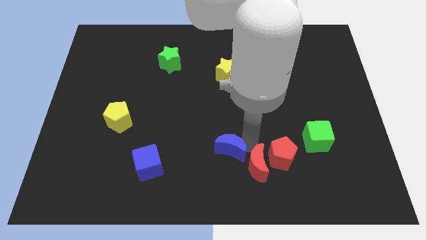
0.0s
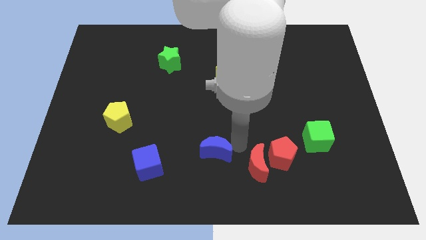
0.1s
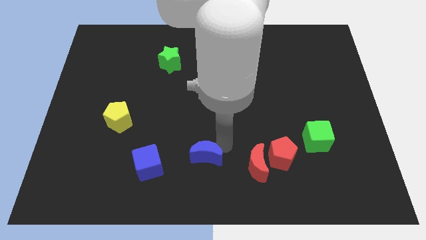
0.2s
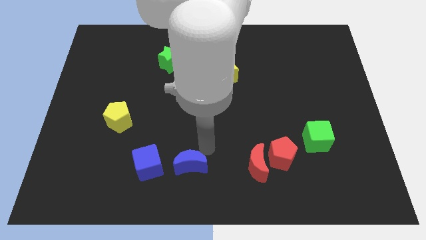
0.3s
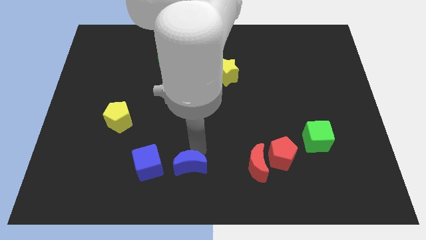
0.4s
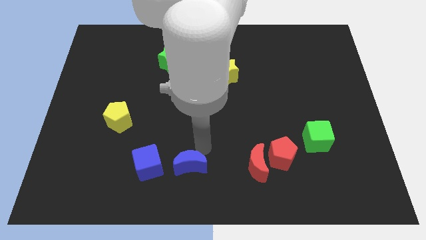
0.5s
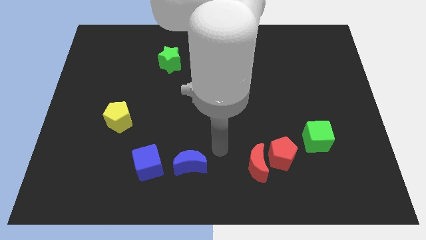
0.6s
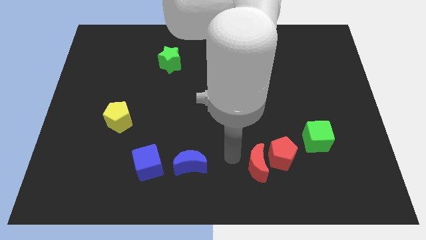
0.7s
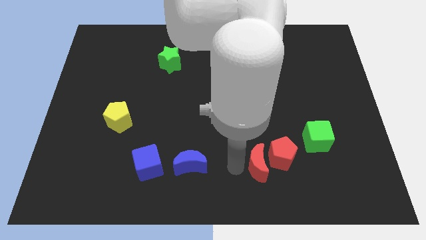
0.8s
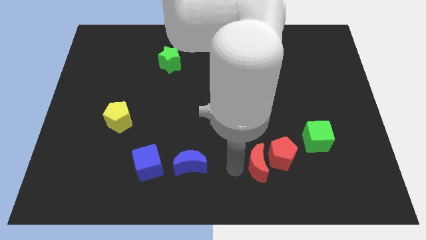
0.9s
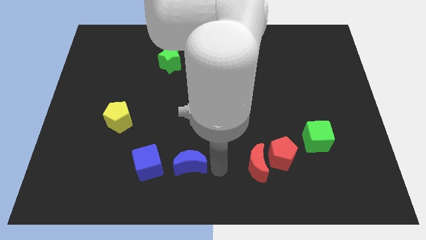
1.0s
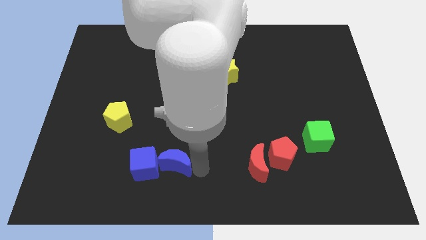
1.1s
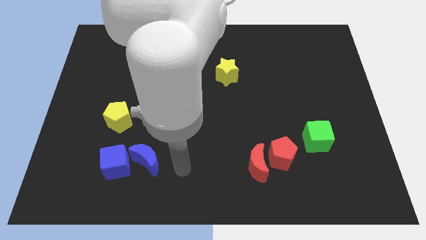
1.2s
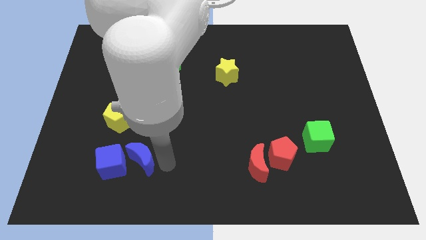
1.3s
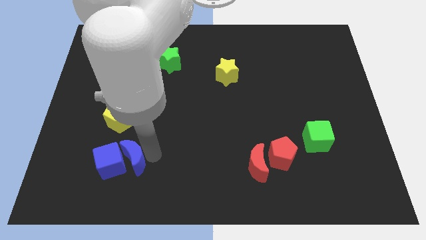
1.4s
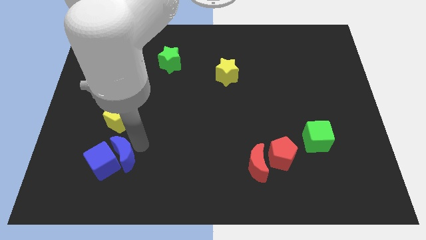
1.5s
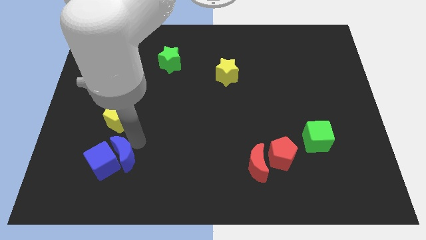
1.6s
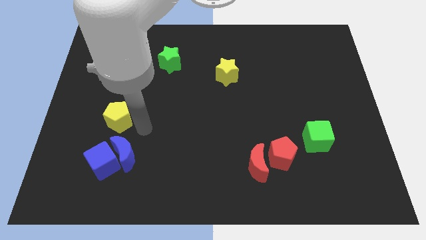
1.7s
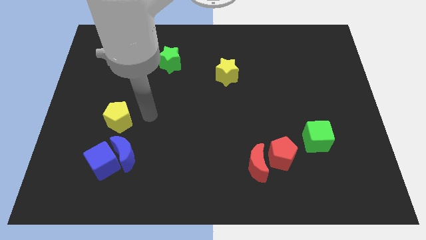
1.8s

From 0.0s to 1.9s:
push the blue moon into blue cube towards left side

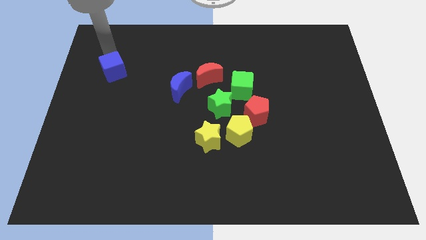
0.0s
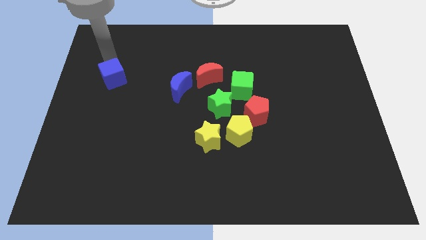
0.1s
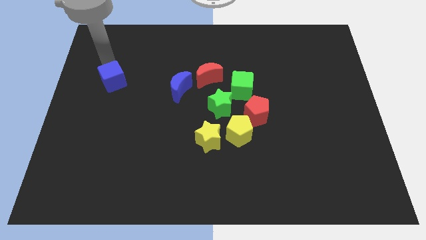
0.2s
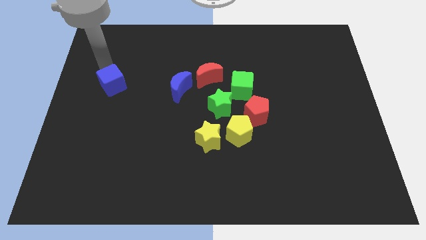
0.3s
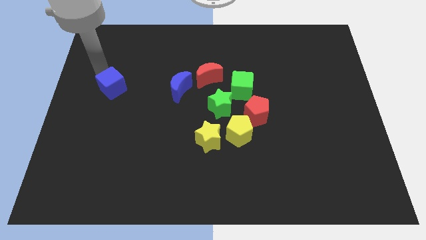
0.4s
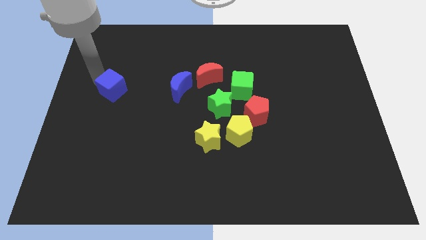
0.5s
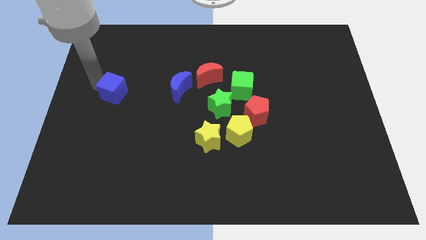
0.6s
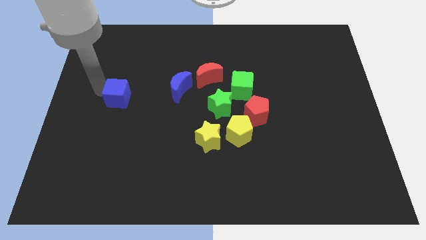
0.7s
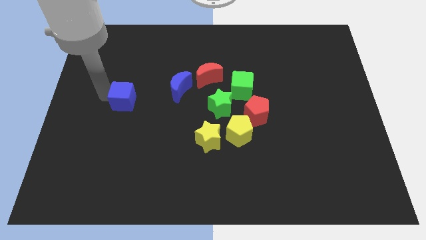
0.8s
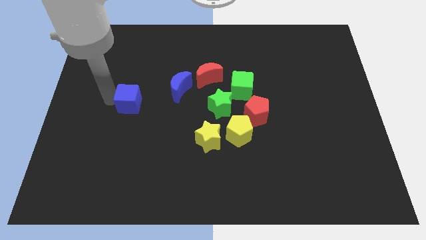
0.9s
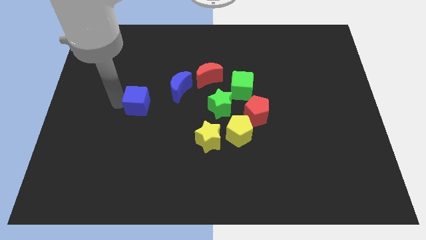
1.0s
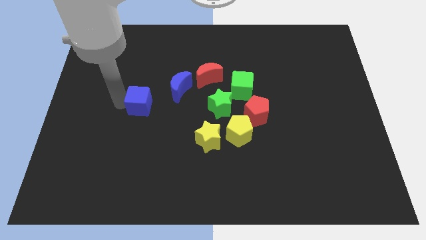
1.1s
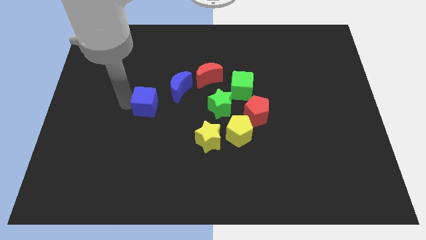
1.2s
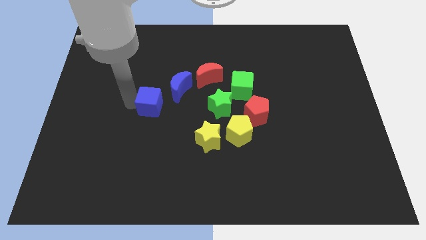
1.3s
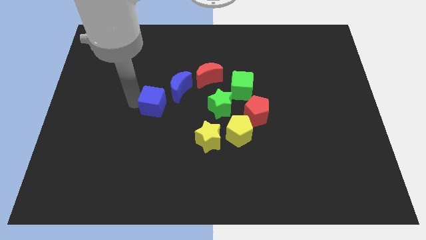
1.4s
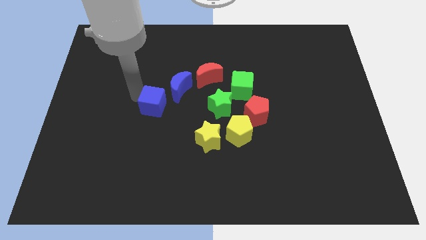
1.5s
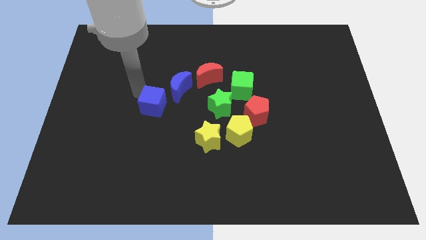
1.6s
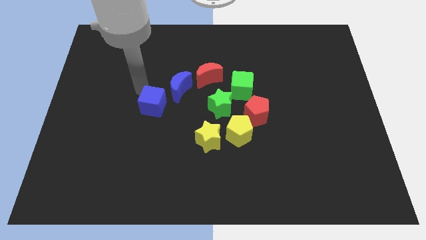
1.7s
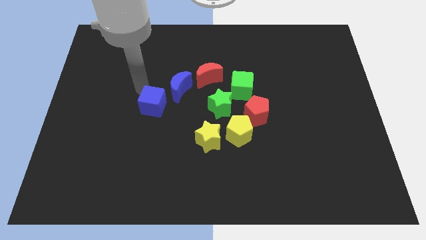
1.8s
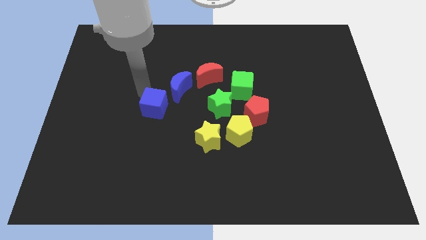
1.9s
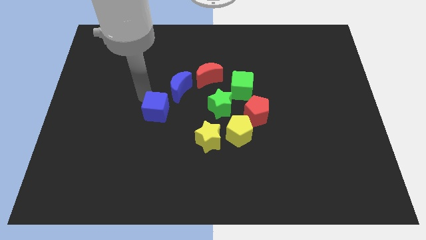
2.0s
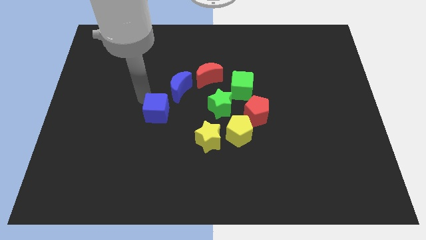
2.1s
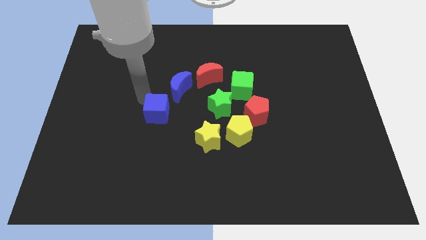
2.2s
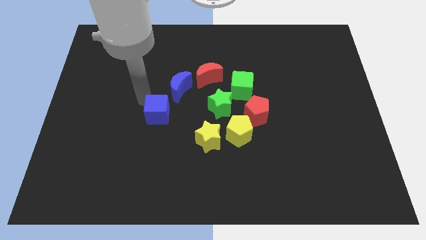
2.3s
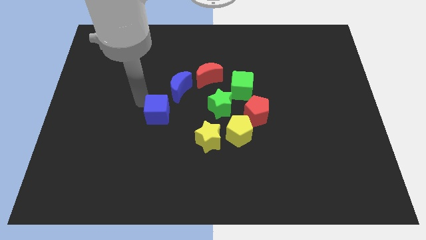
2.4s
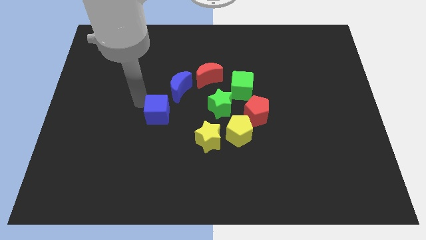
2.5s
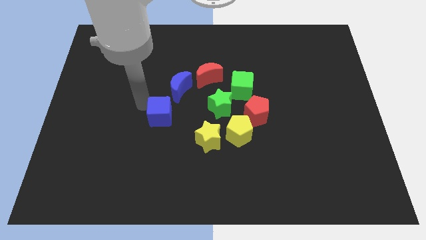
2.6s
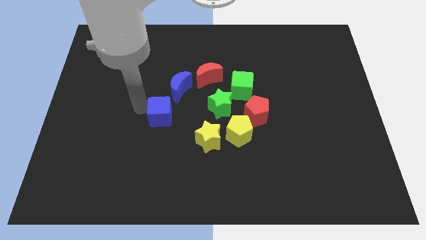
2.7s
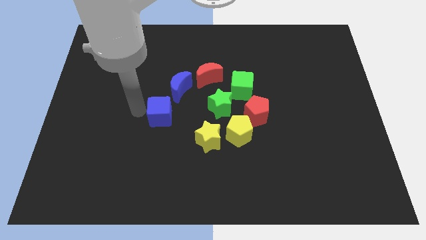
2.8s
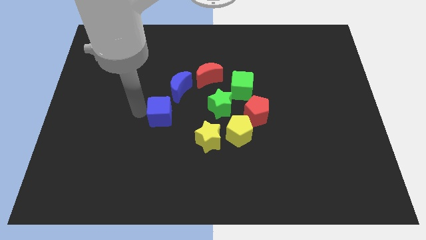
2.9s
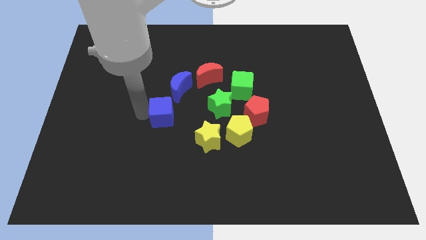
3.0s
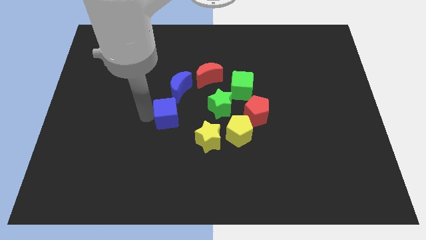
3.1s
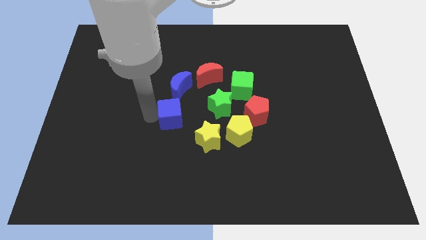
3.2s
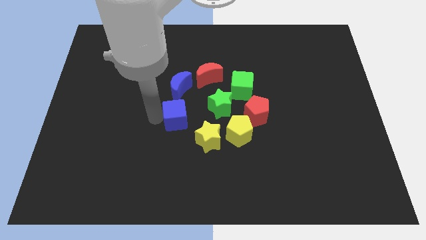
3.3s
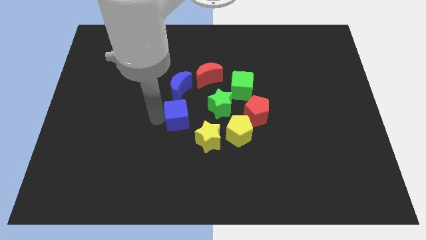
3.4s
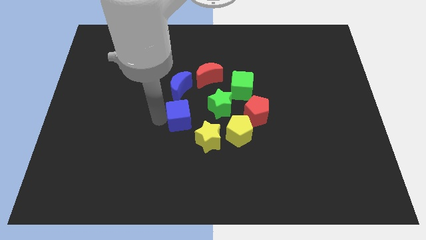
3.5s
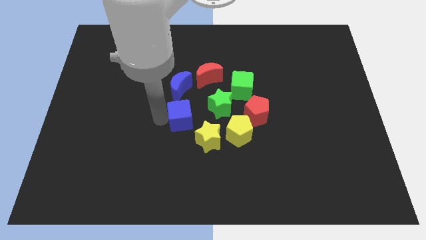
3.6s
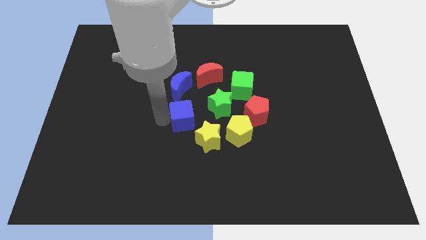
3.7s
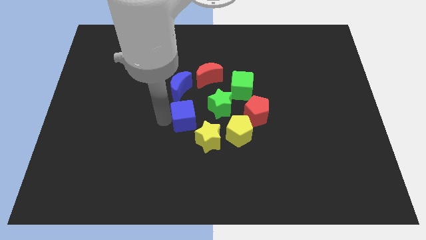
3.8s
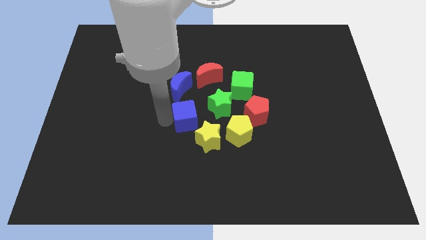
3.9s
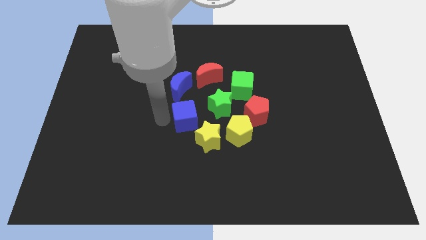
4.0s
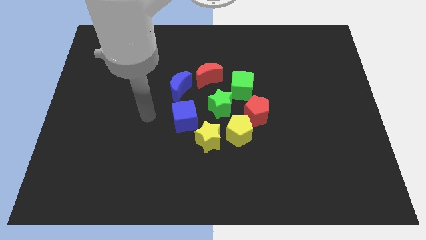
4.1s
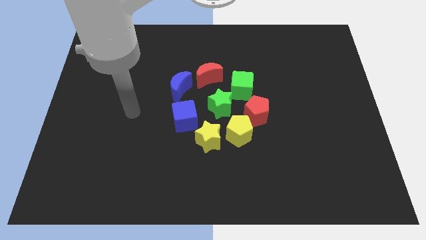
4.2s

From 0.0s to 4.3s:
place the blue cube in between the blue moon and yellow star

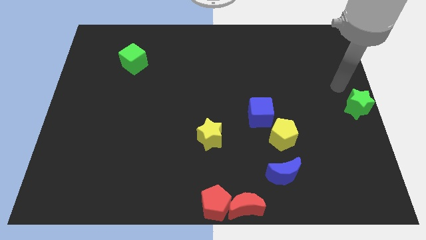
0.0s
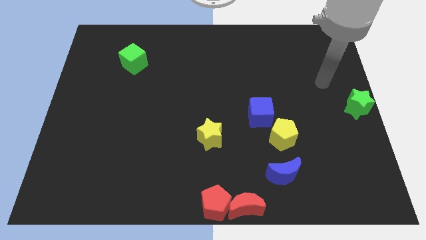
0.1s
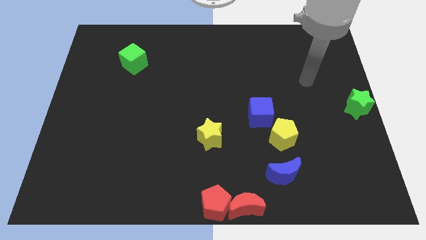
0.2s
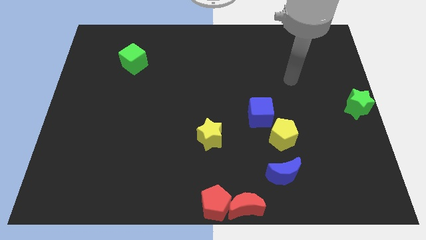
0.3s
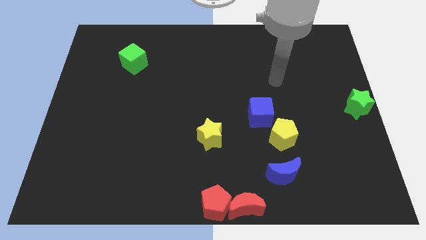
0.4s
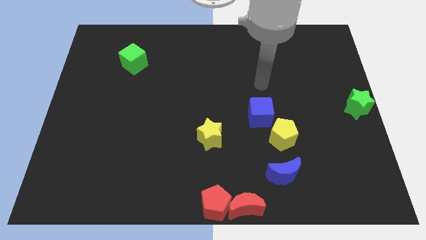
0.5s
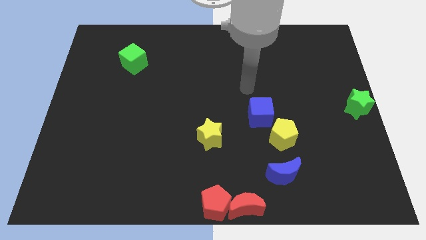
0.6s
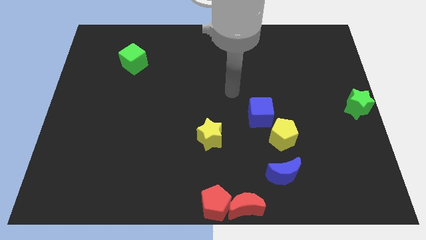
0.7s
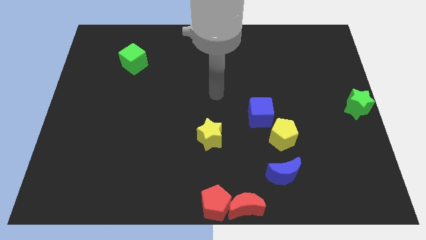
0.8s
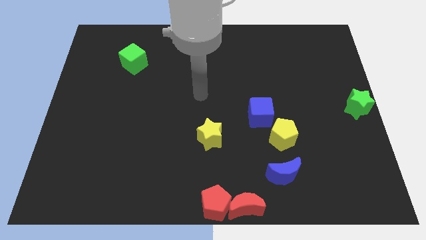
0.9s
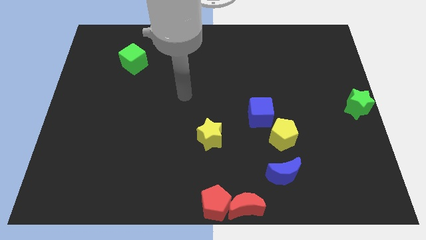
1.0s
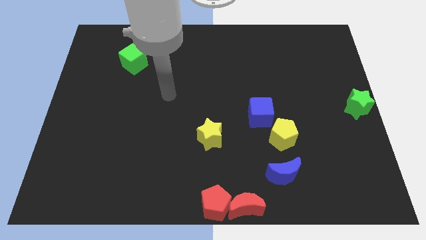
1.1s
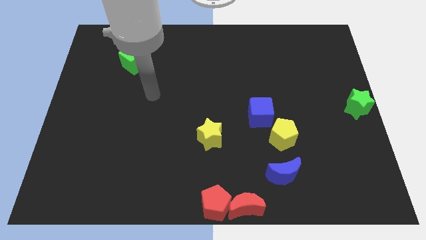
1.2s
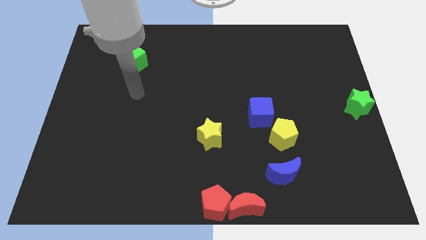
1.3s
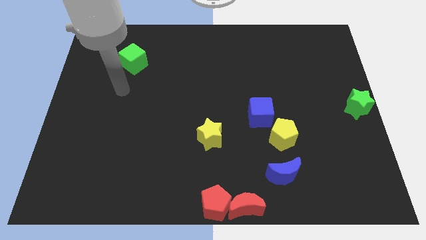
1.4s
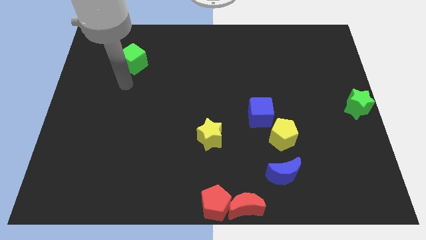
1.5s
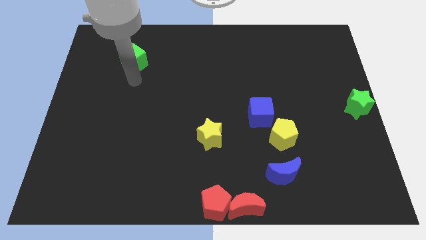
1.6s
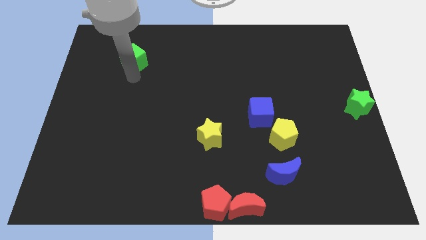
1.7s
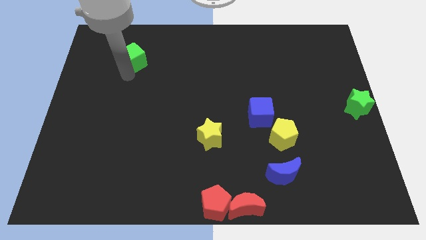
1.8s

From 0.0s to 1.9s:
point the arm at the bottom of the green cube

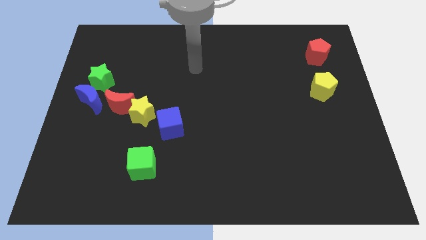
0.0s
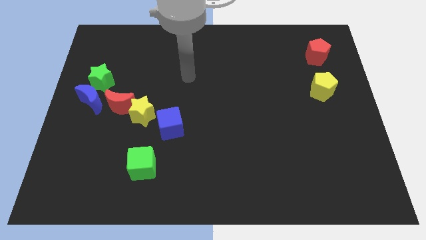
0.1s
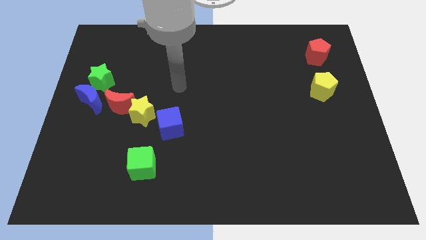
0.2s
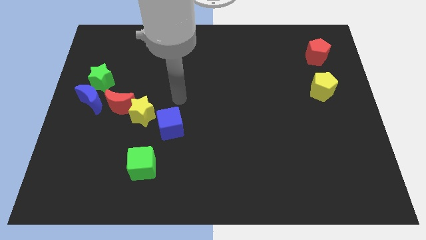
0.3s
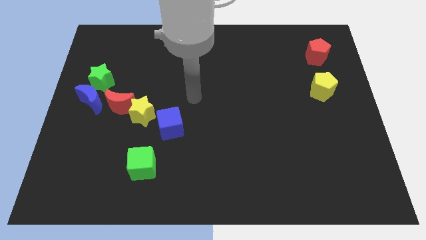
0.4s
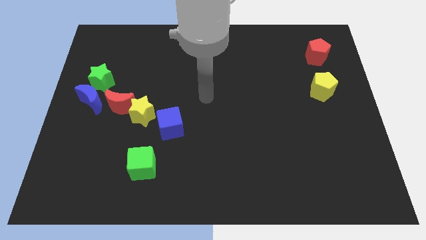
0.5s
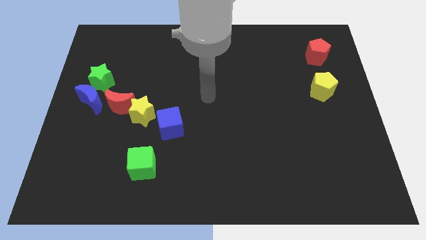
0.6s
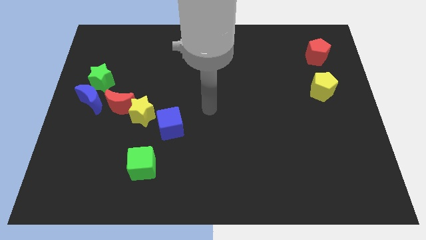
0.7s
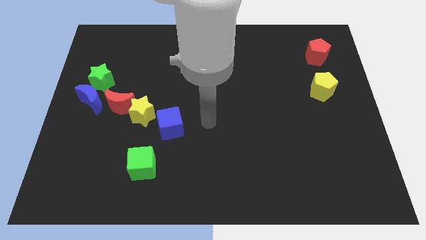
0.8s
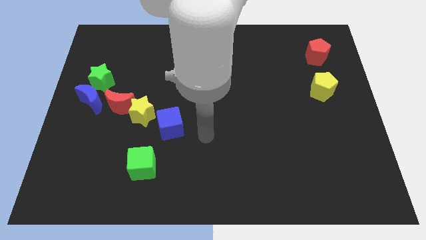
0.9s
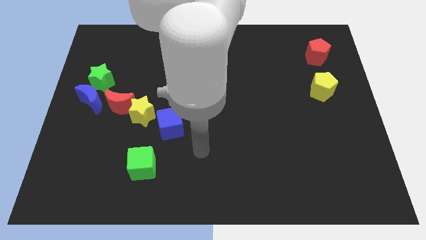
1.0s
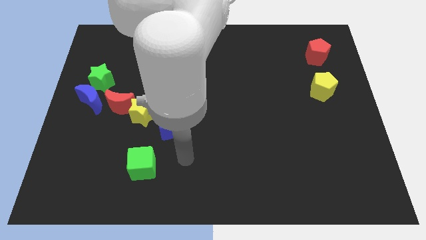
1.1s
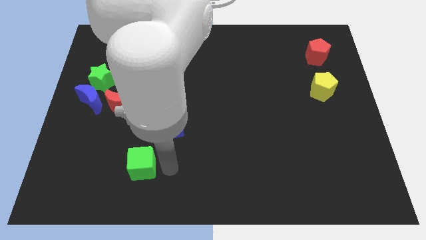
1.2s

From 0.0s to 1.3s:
point your hand to the right of the green cube
